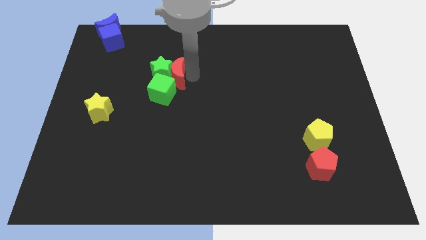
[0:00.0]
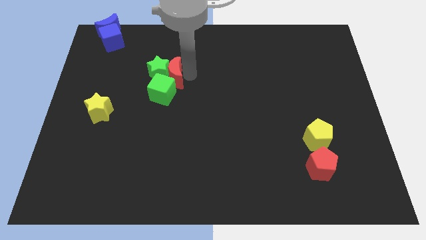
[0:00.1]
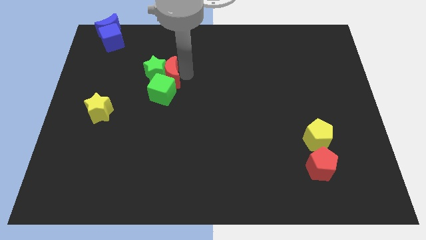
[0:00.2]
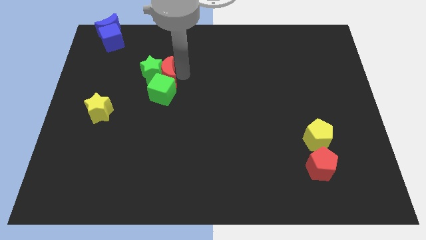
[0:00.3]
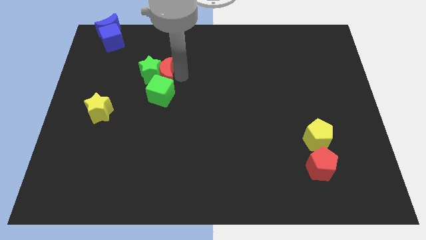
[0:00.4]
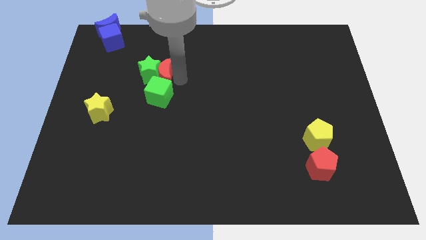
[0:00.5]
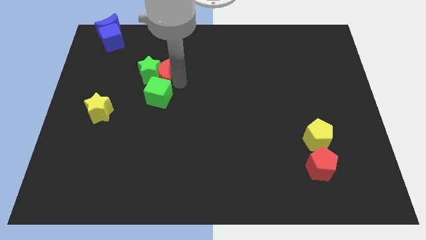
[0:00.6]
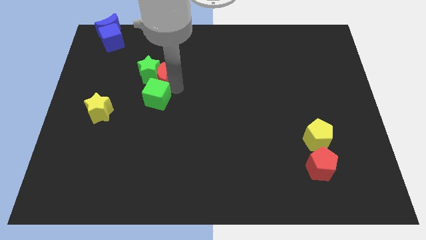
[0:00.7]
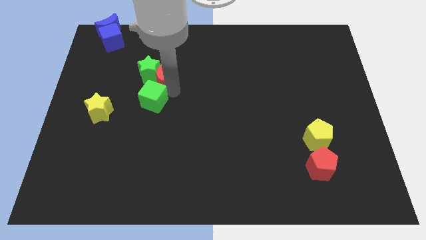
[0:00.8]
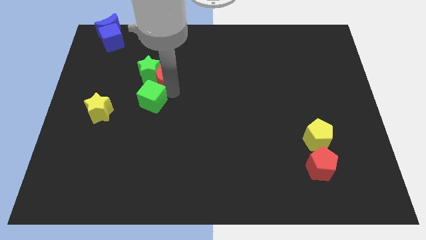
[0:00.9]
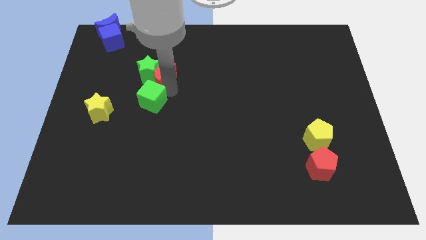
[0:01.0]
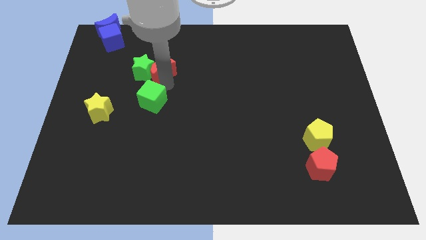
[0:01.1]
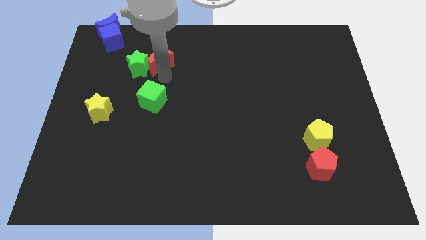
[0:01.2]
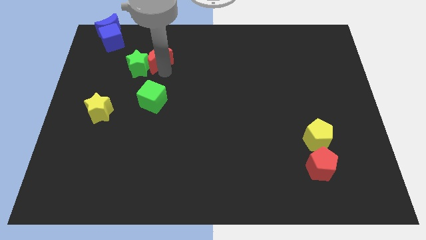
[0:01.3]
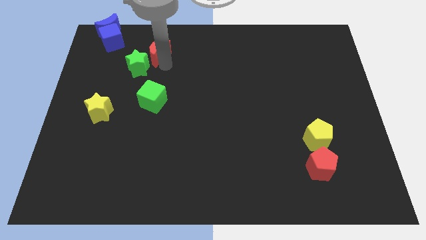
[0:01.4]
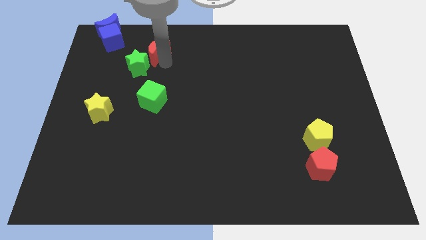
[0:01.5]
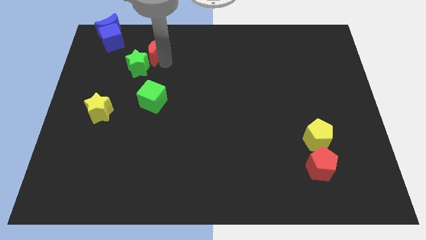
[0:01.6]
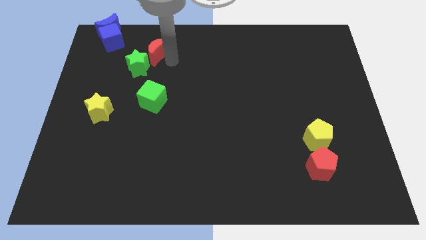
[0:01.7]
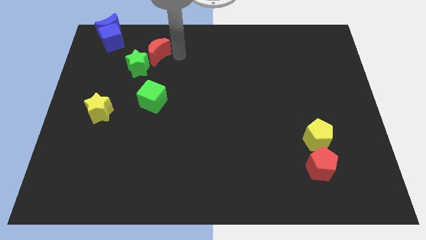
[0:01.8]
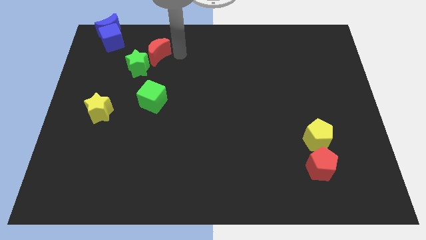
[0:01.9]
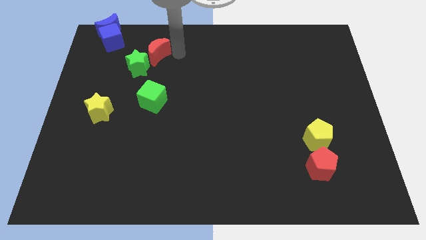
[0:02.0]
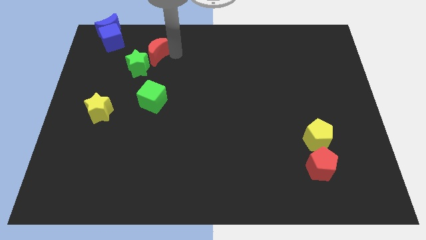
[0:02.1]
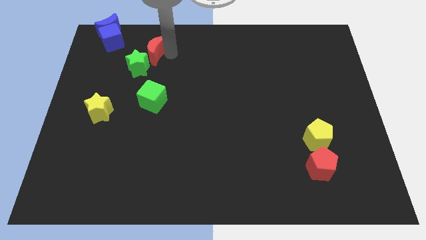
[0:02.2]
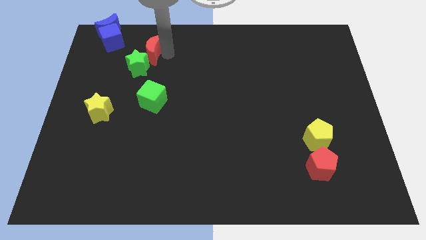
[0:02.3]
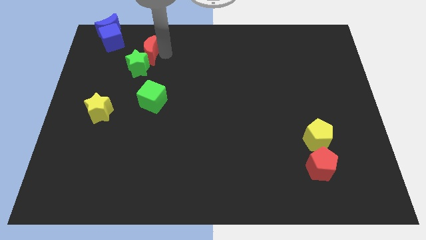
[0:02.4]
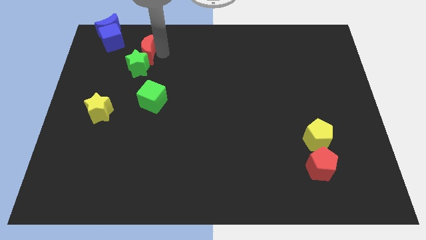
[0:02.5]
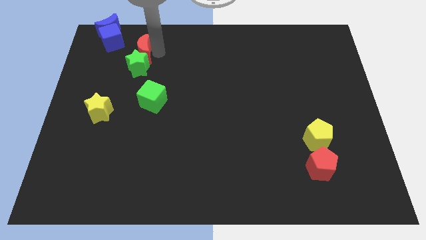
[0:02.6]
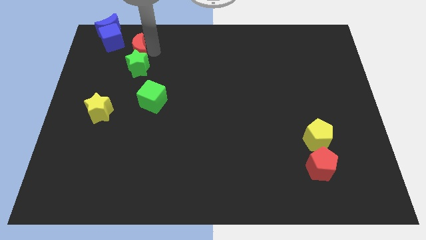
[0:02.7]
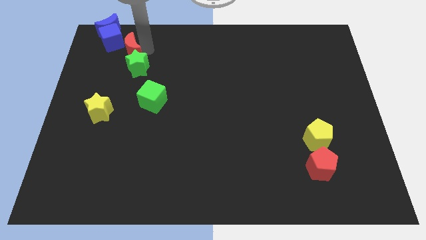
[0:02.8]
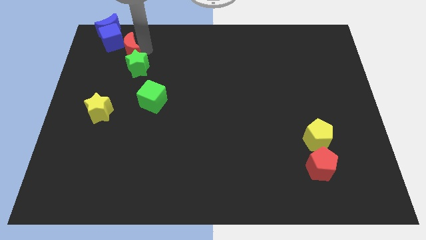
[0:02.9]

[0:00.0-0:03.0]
push red crescent above green star

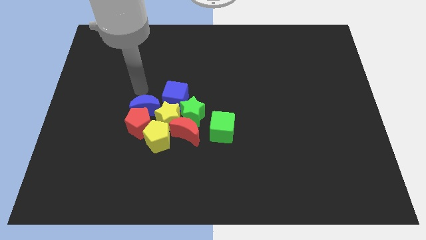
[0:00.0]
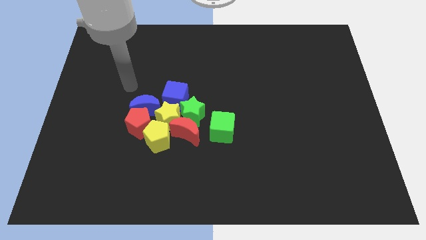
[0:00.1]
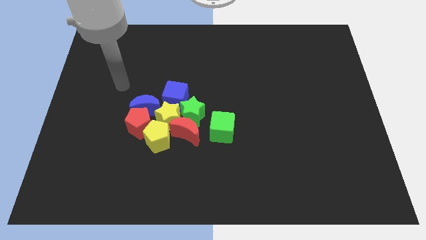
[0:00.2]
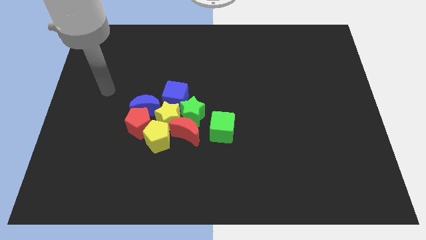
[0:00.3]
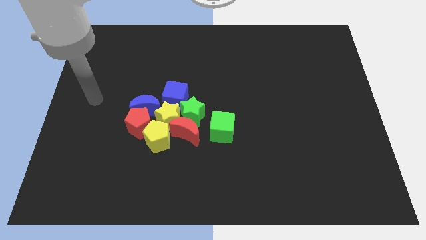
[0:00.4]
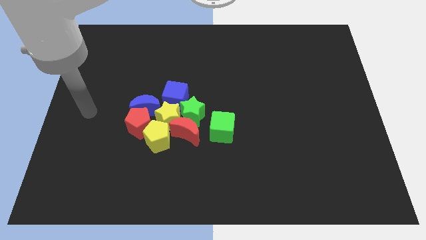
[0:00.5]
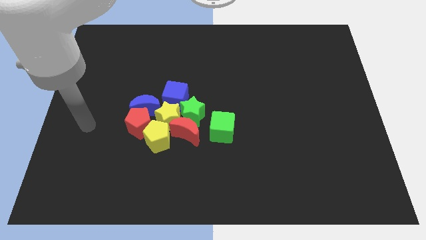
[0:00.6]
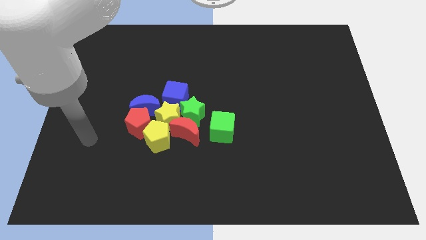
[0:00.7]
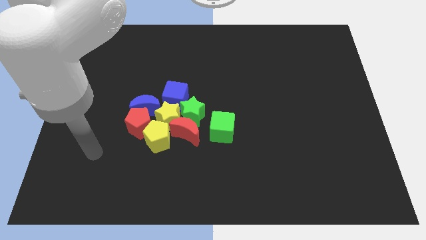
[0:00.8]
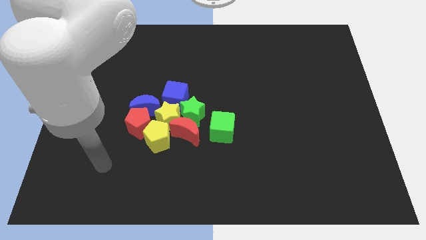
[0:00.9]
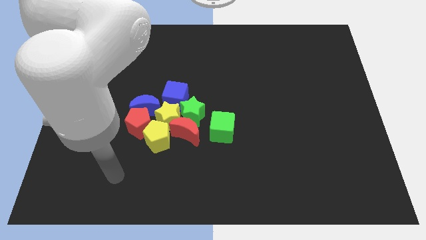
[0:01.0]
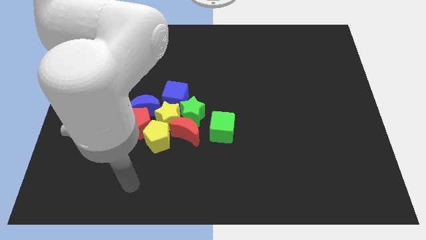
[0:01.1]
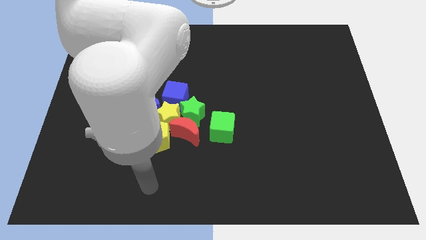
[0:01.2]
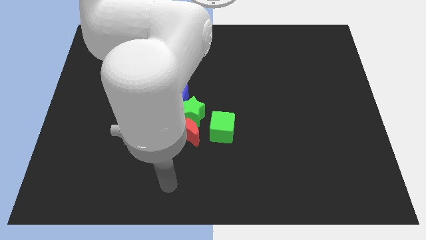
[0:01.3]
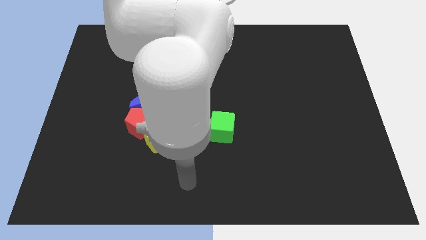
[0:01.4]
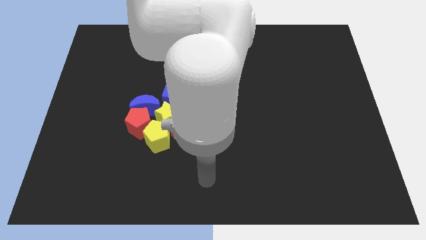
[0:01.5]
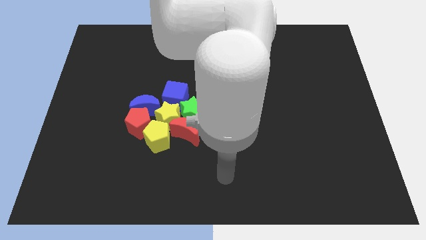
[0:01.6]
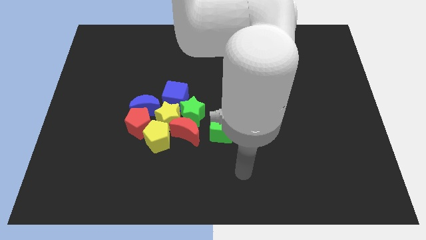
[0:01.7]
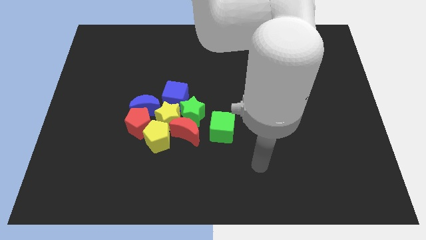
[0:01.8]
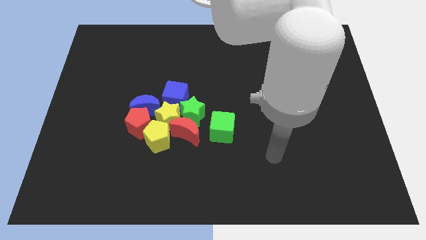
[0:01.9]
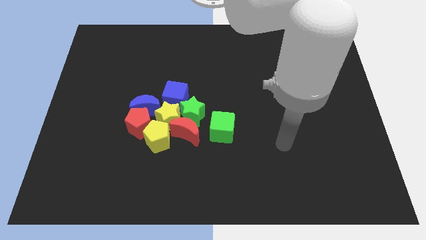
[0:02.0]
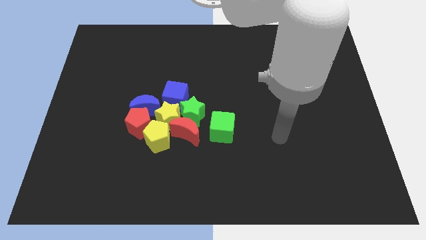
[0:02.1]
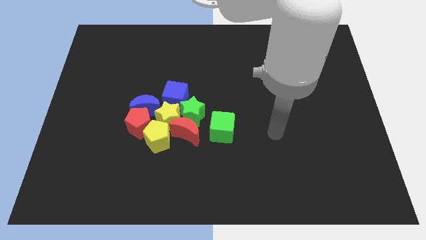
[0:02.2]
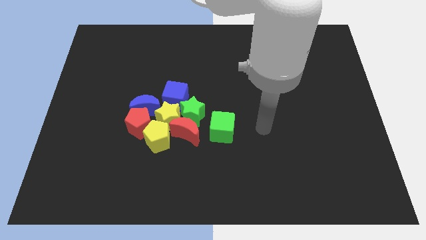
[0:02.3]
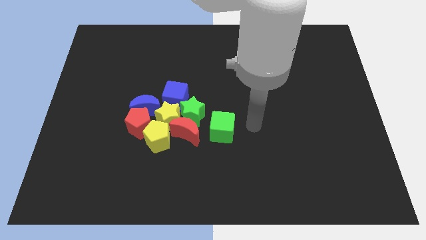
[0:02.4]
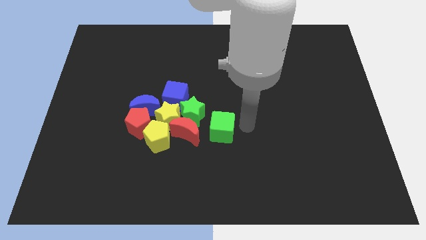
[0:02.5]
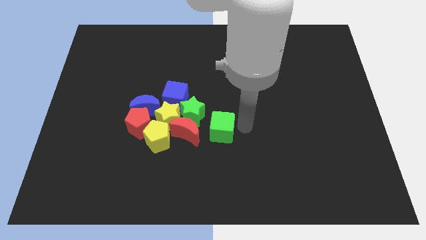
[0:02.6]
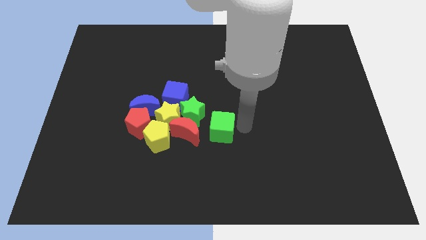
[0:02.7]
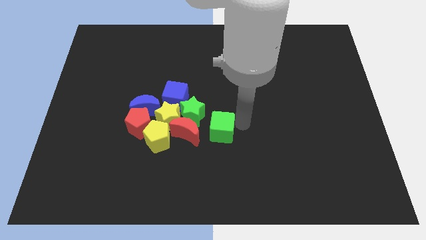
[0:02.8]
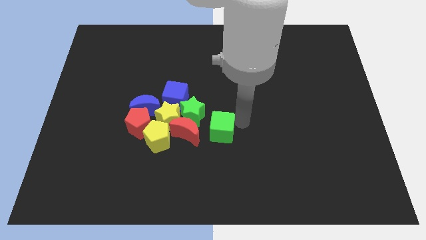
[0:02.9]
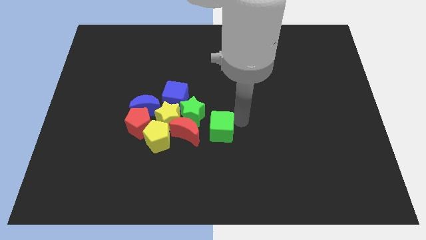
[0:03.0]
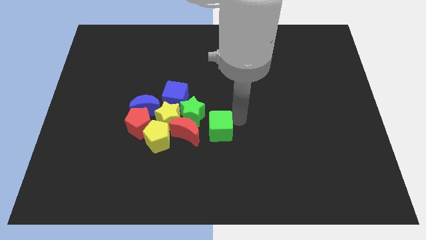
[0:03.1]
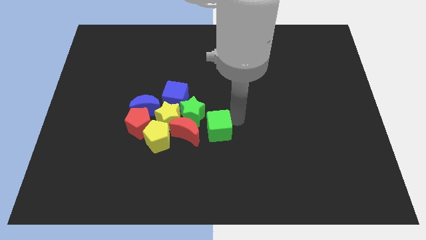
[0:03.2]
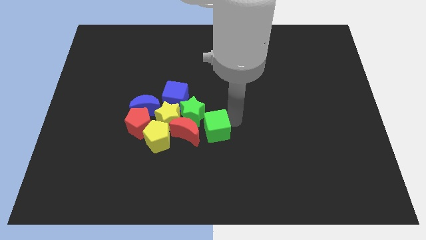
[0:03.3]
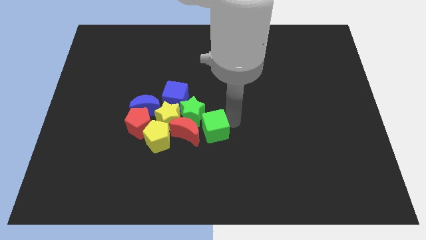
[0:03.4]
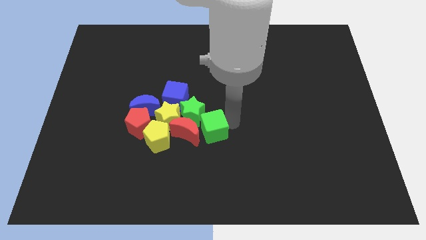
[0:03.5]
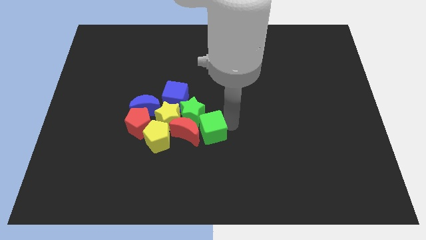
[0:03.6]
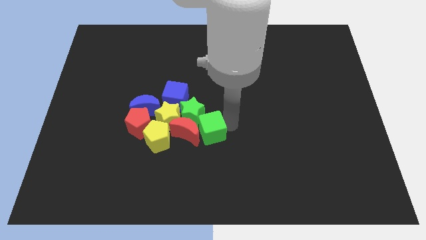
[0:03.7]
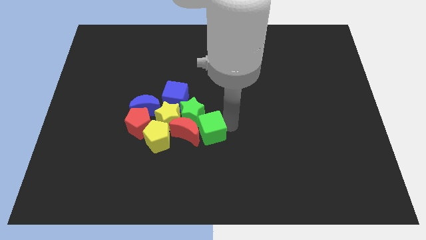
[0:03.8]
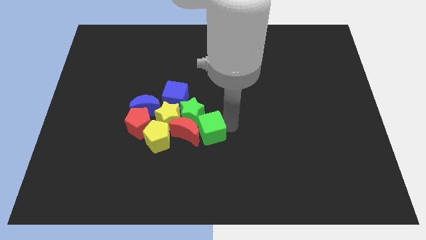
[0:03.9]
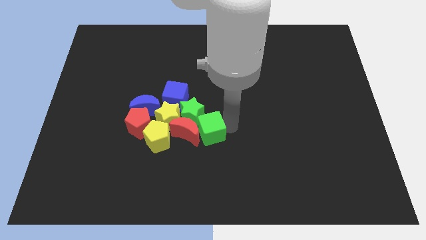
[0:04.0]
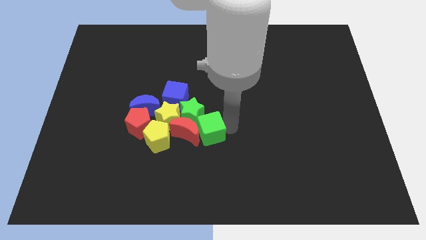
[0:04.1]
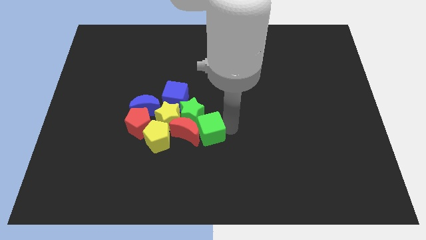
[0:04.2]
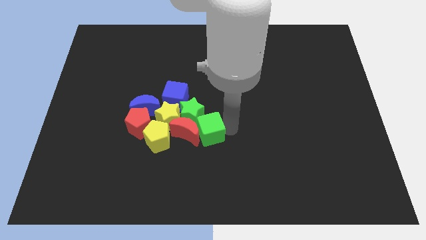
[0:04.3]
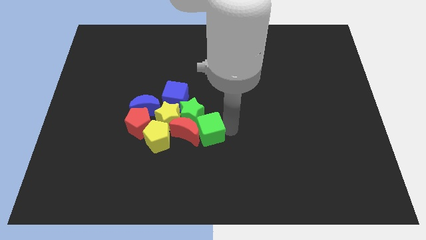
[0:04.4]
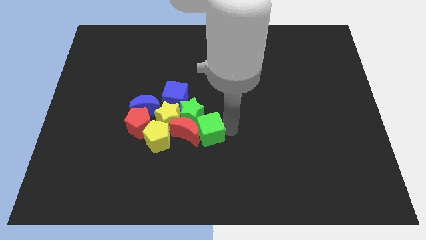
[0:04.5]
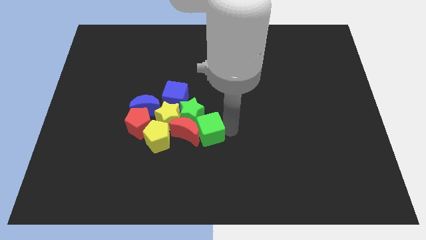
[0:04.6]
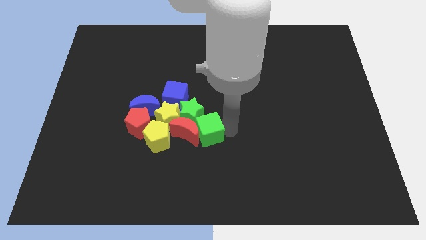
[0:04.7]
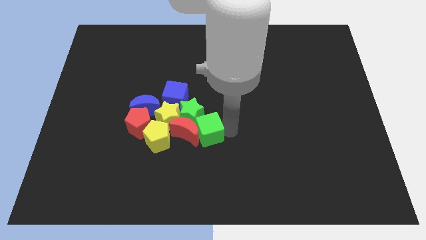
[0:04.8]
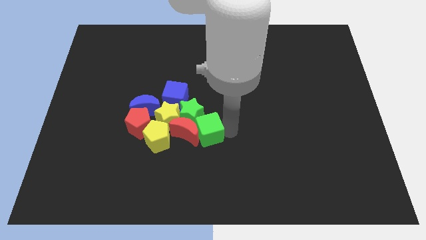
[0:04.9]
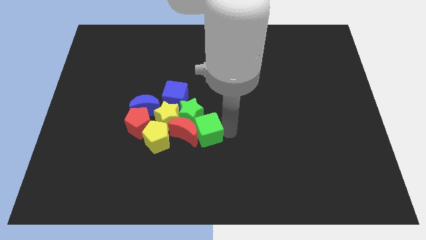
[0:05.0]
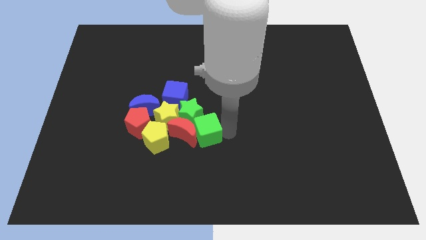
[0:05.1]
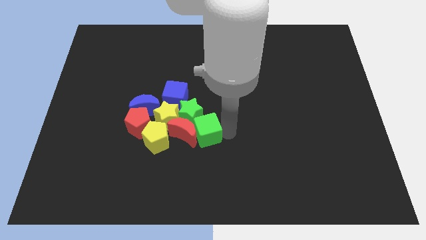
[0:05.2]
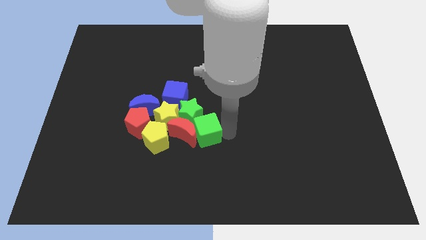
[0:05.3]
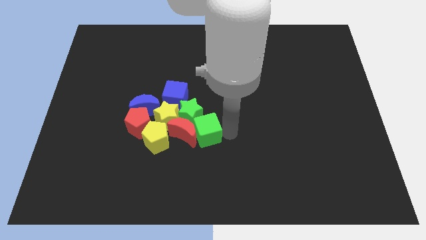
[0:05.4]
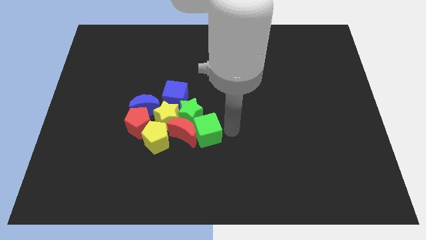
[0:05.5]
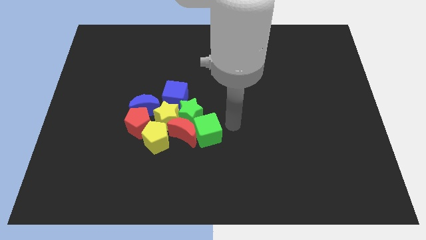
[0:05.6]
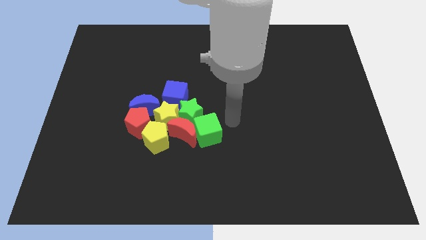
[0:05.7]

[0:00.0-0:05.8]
push the green cube into the red crescent

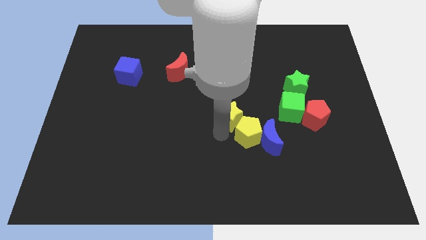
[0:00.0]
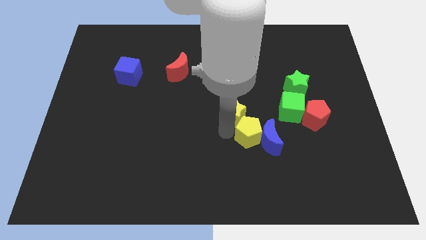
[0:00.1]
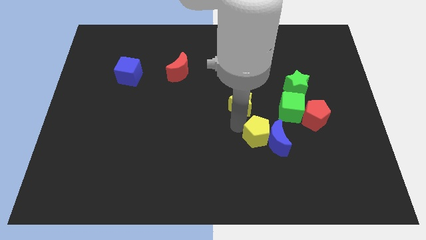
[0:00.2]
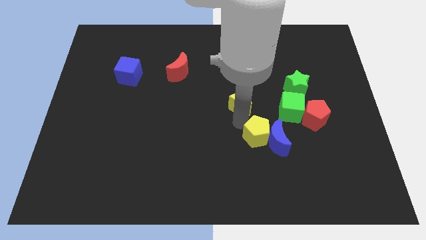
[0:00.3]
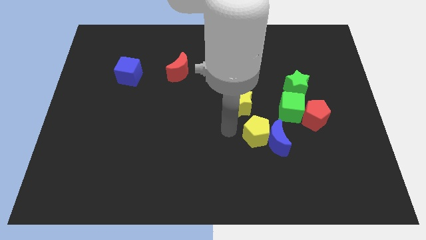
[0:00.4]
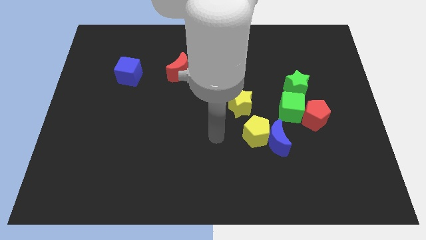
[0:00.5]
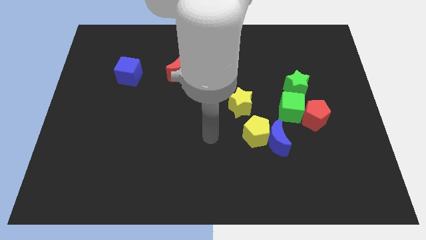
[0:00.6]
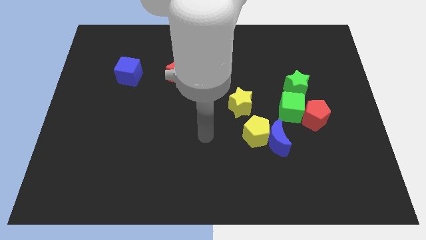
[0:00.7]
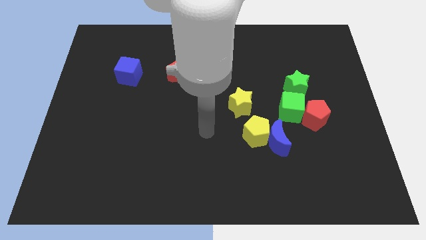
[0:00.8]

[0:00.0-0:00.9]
separate yellow blocks
